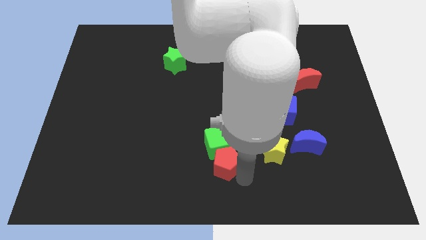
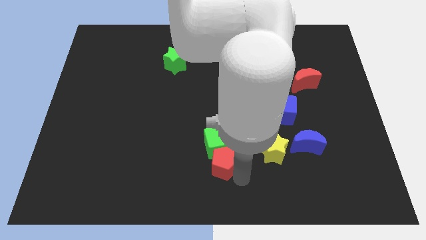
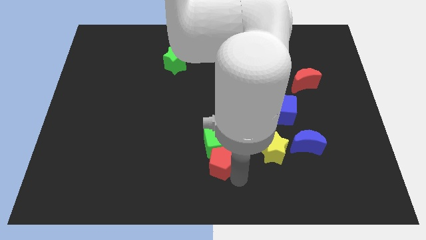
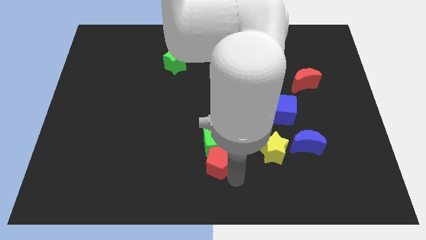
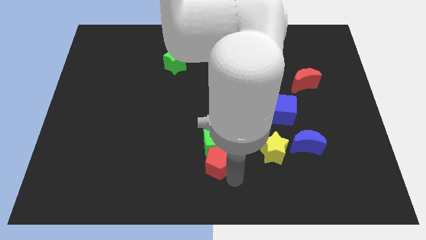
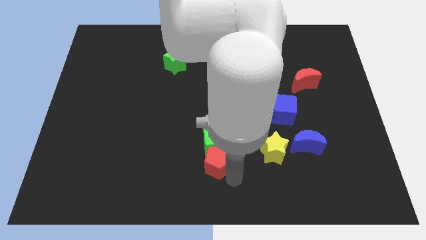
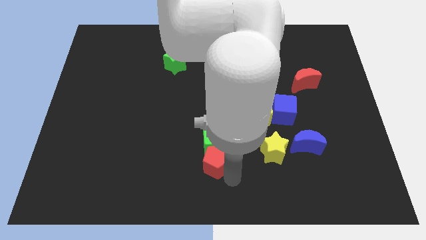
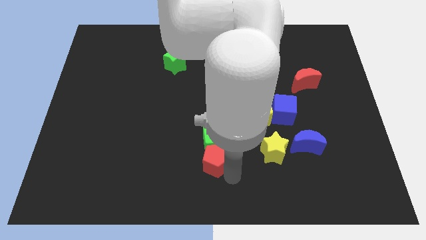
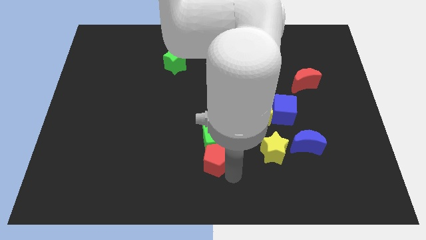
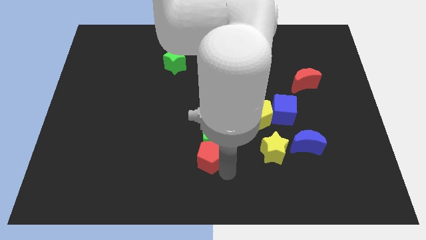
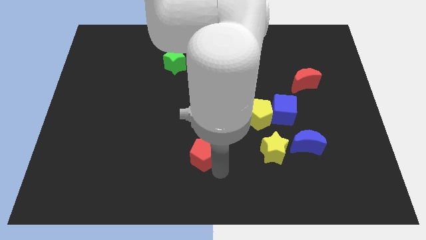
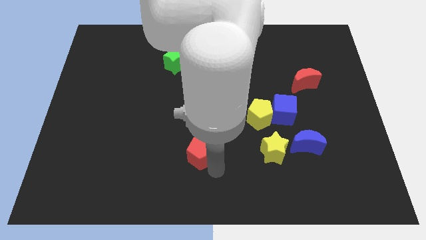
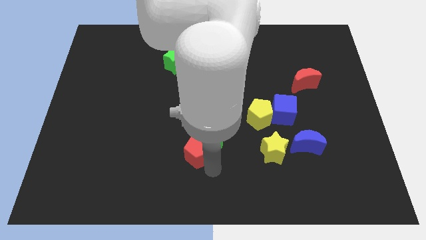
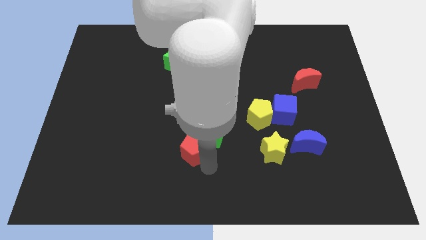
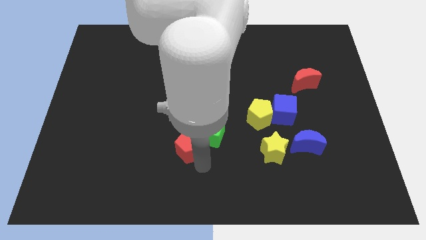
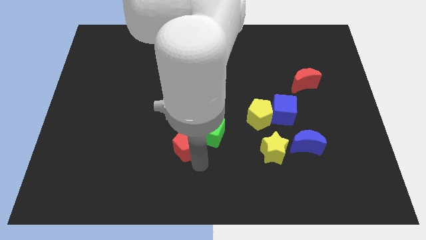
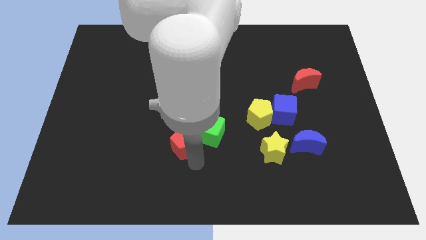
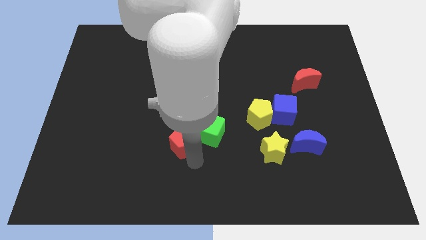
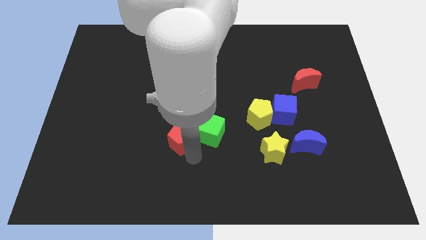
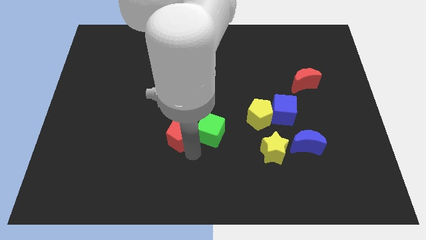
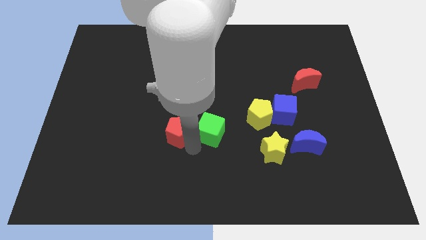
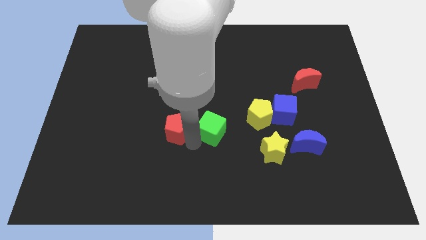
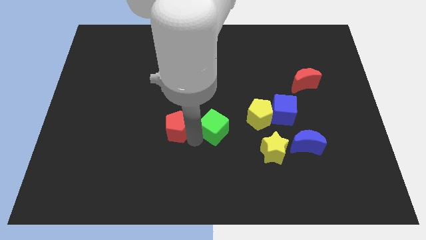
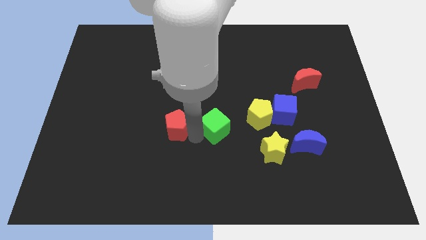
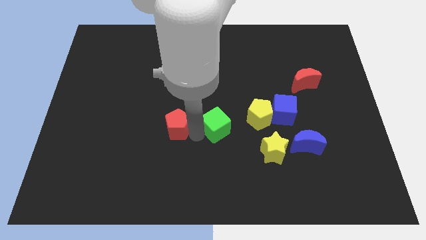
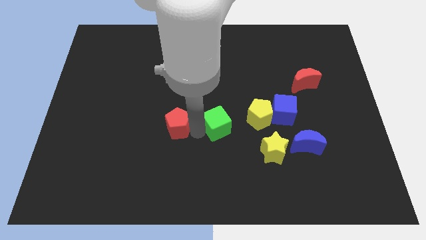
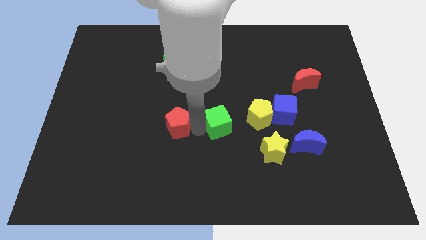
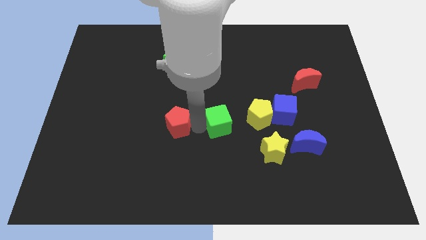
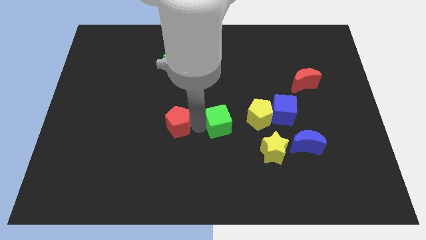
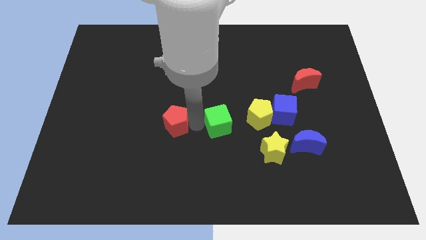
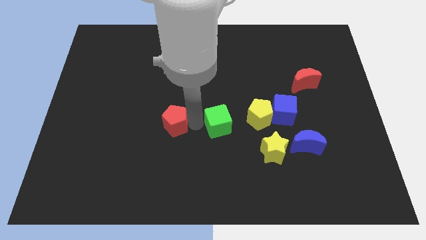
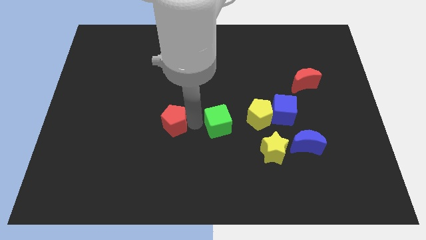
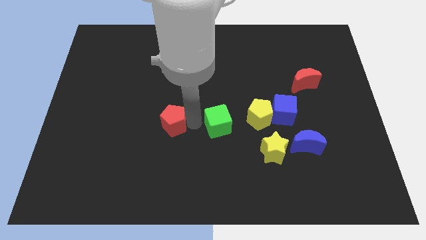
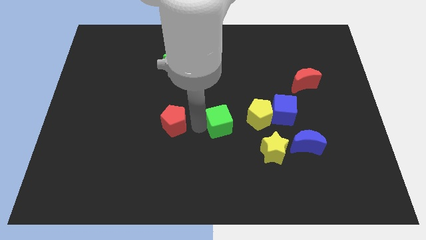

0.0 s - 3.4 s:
move the red pentagon to the left side of the green cube

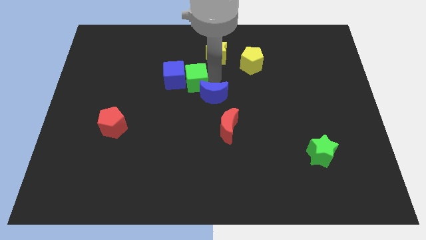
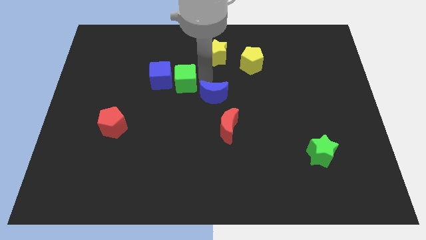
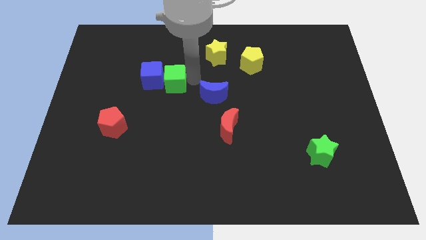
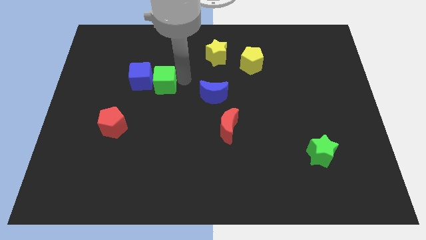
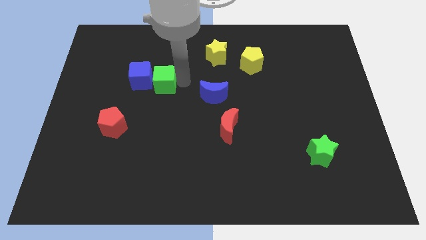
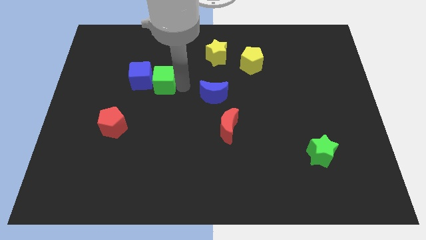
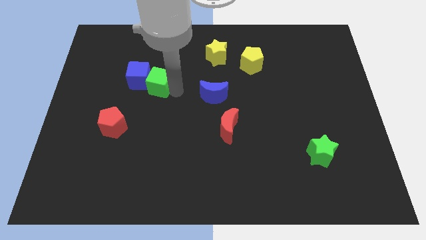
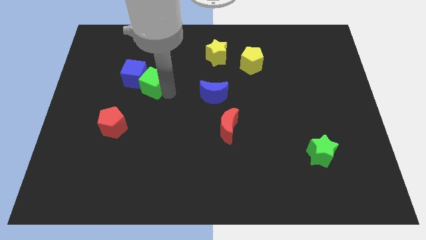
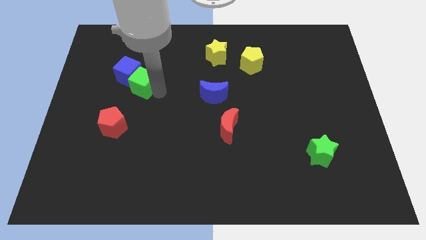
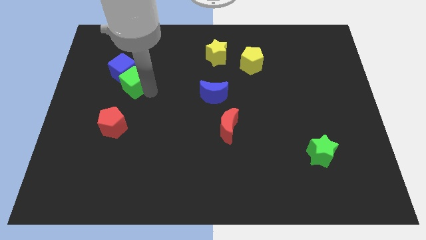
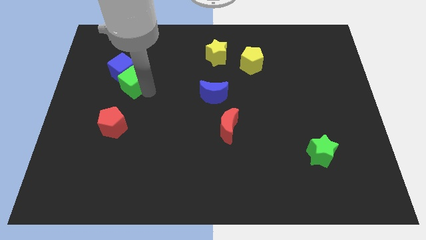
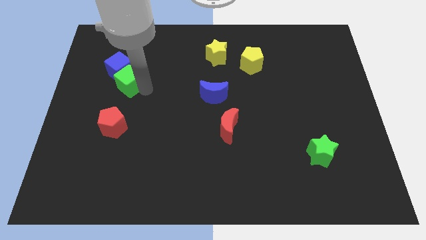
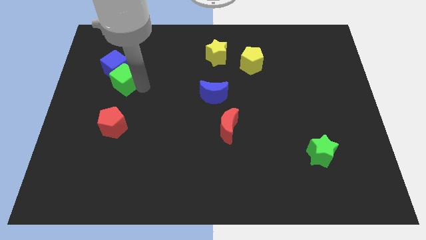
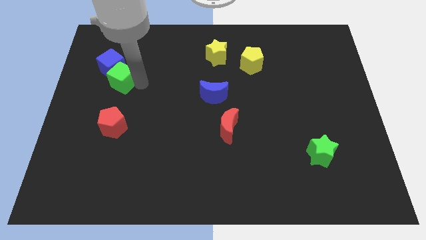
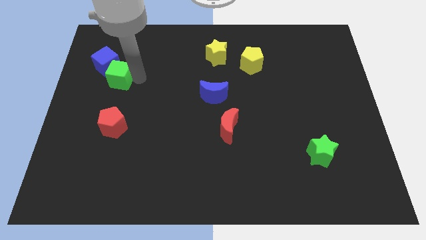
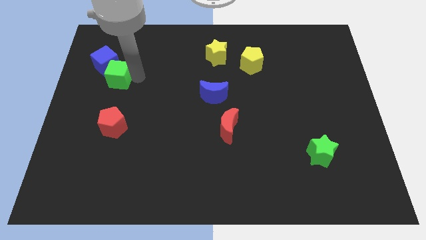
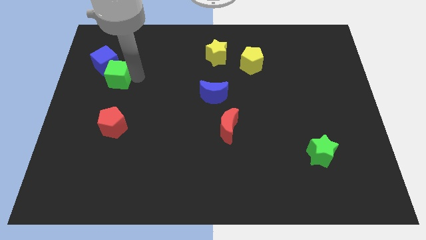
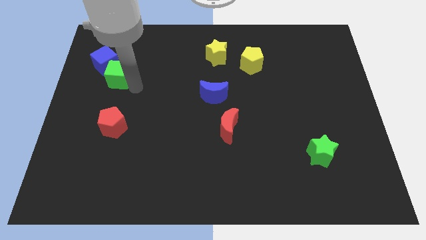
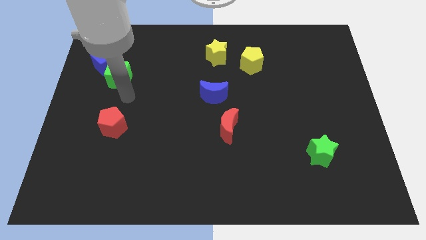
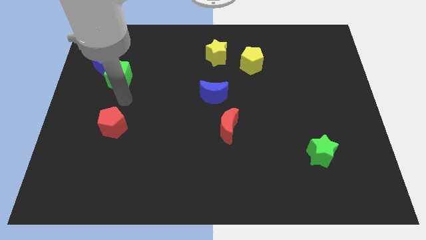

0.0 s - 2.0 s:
push the green cube and blue cube towards the left side of the board

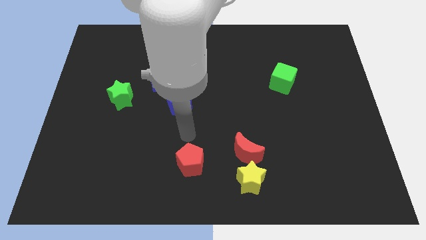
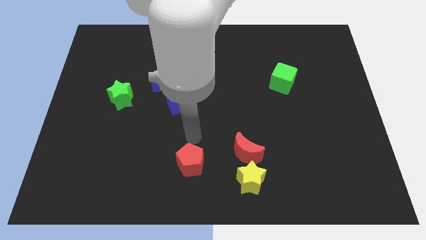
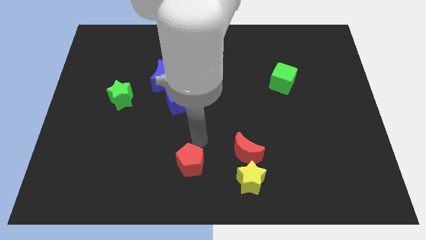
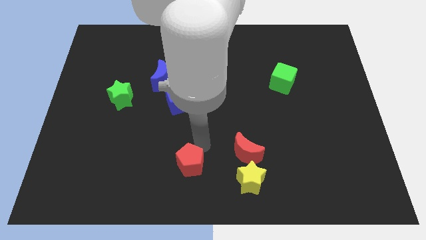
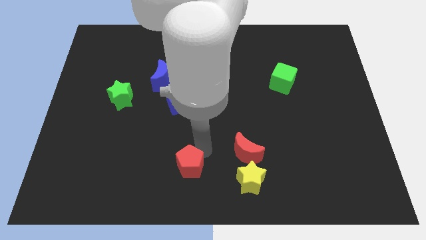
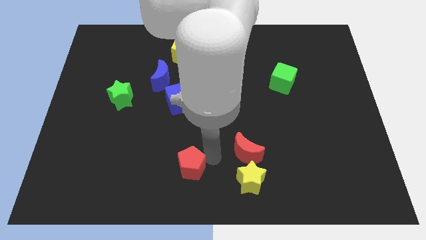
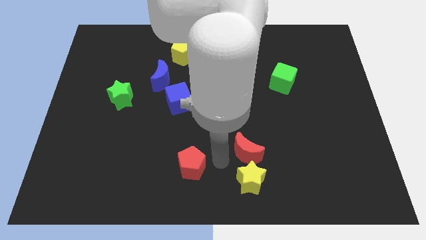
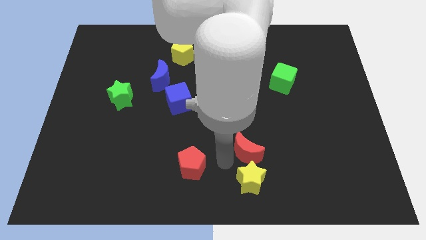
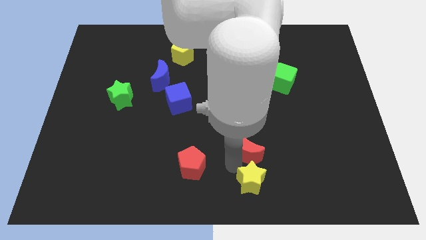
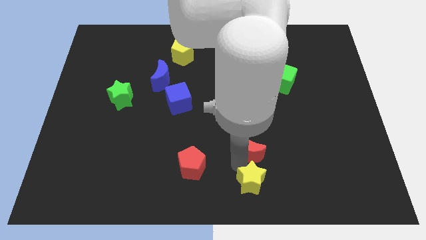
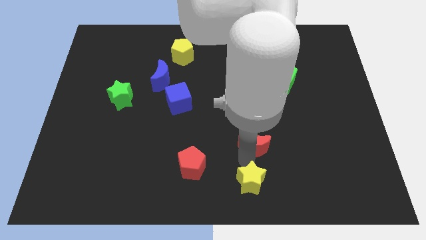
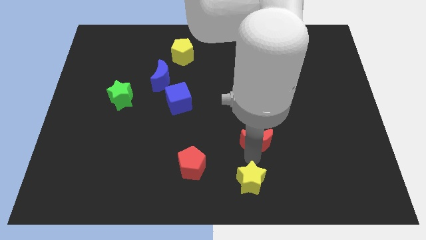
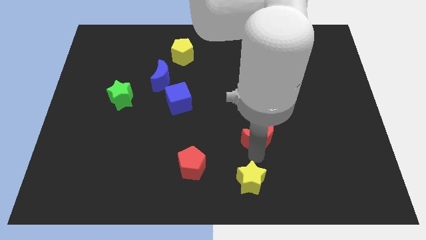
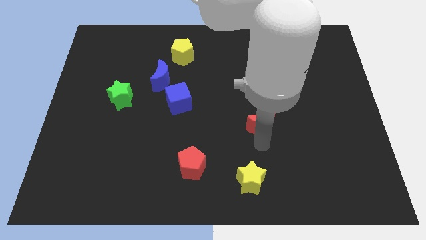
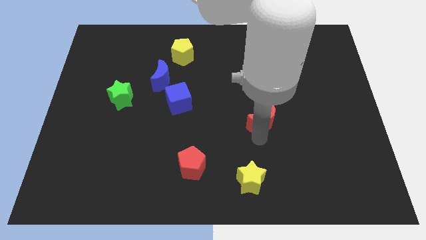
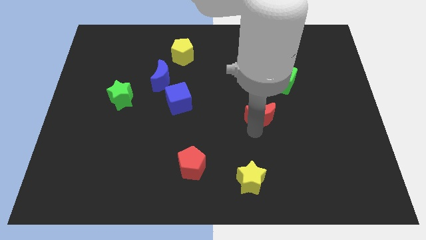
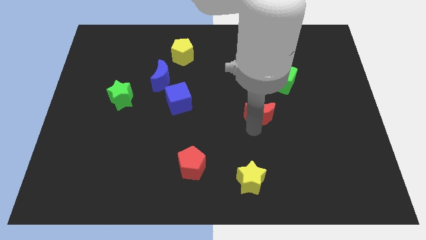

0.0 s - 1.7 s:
move the red moon left diagonally to the green cube

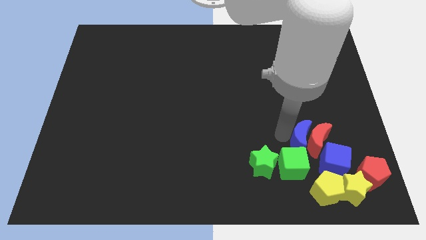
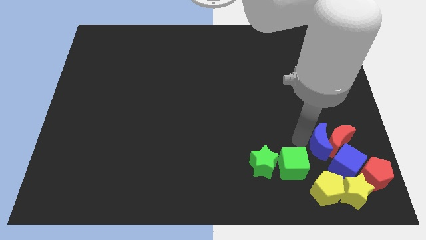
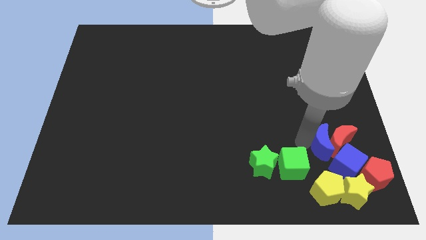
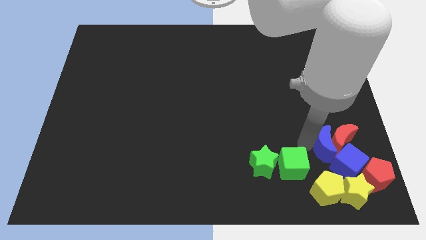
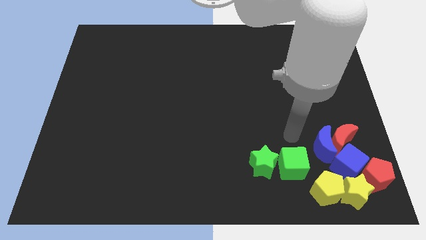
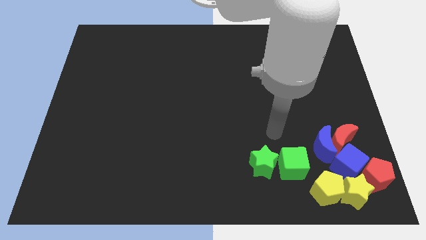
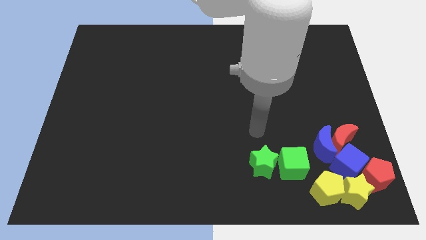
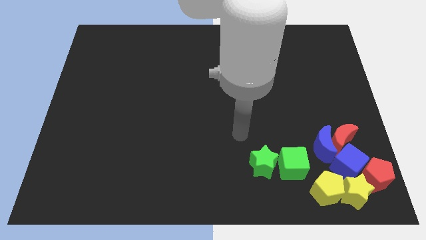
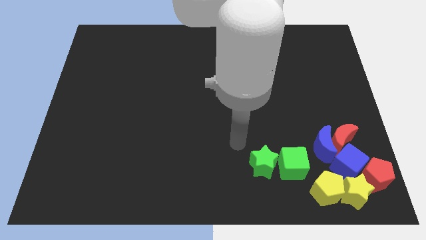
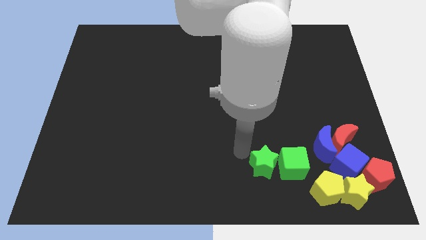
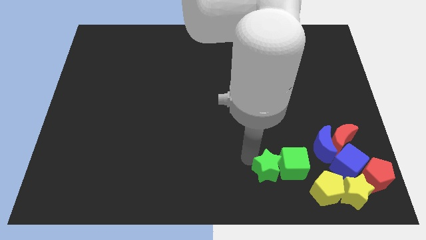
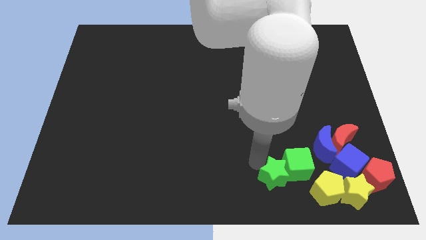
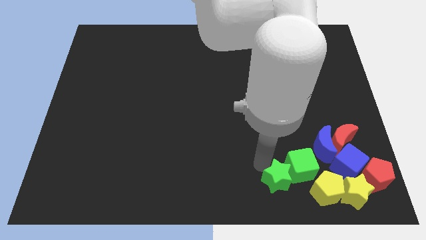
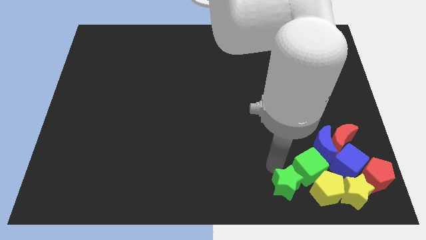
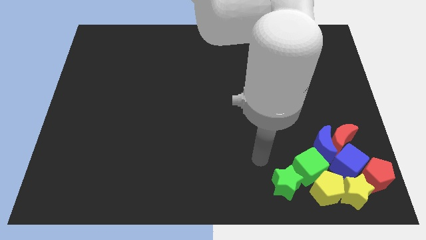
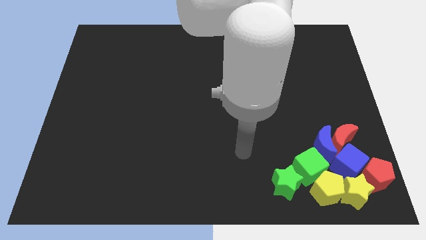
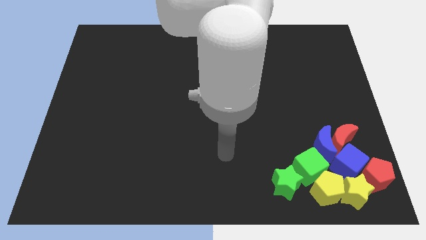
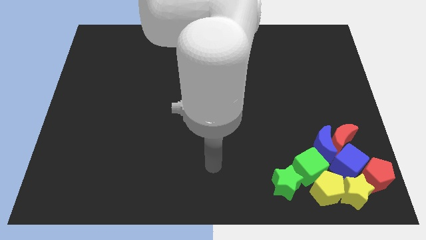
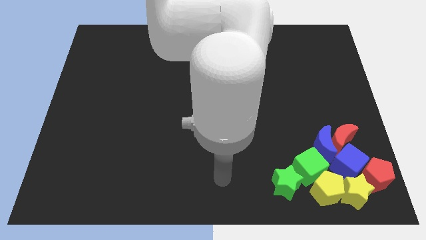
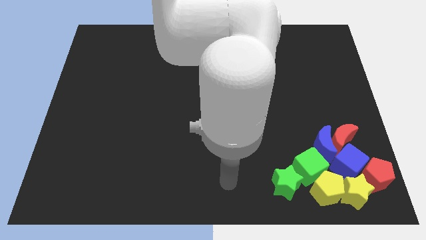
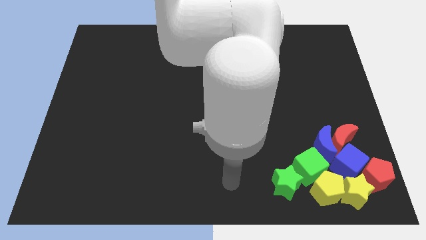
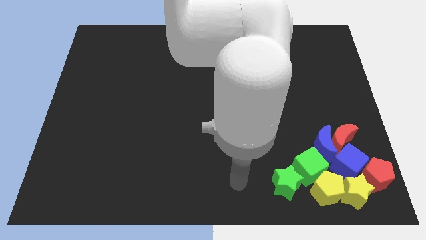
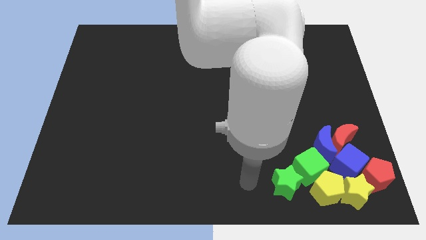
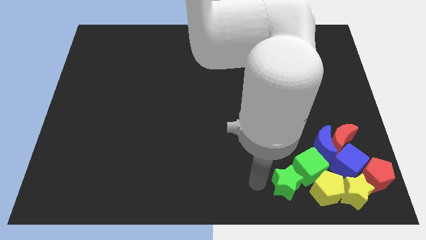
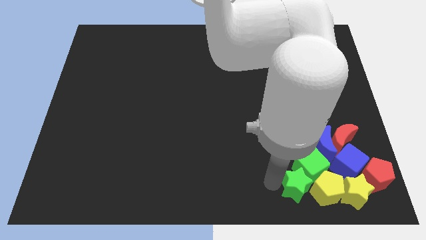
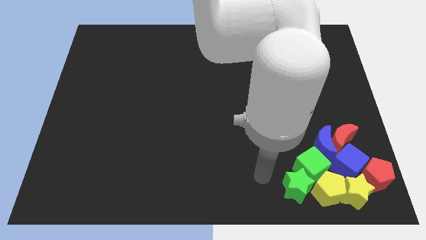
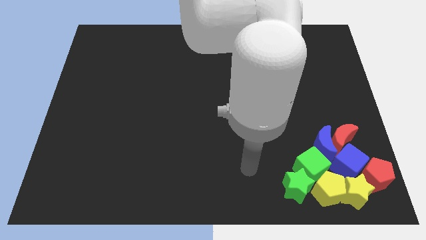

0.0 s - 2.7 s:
group up all the blocks
